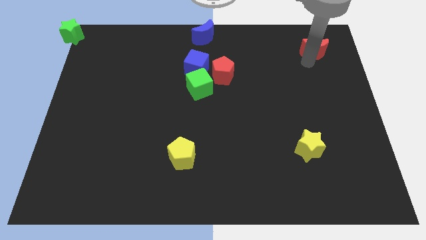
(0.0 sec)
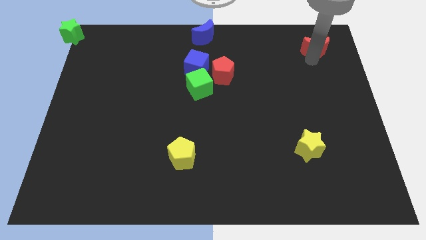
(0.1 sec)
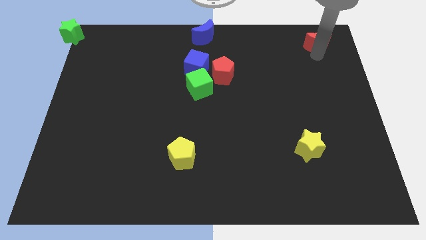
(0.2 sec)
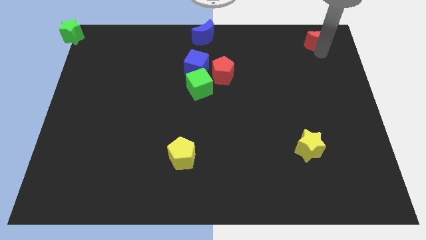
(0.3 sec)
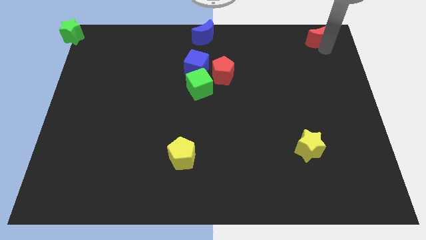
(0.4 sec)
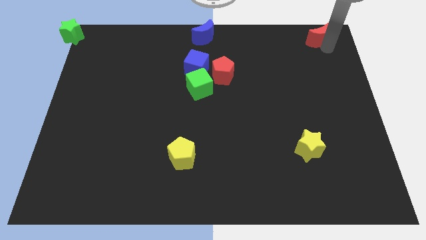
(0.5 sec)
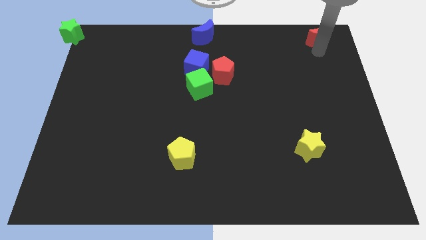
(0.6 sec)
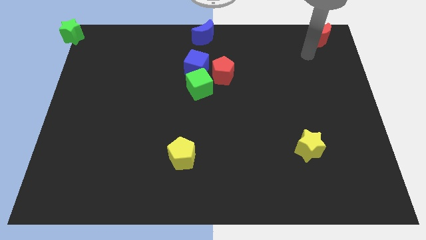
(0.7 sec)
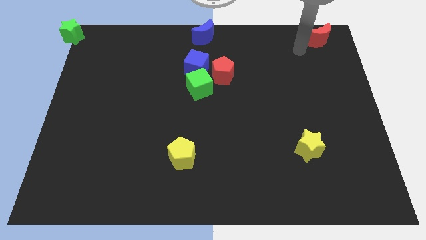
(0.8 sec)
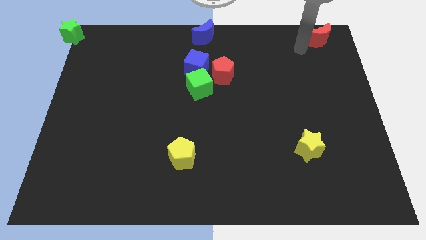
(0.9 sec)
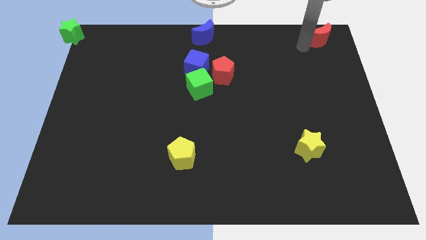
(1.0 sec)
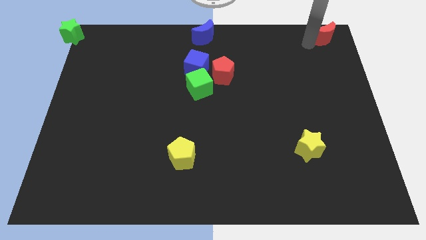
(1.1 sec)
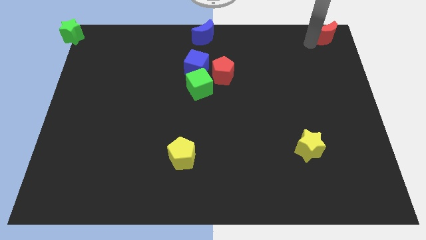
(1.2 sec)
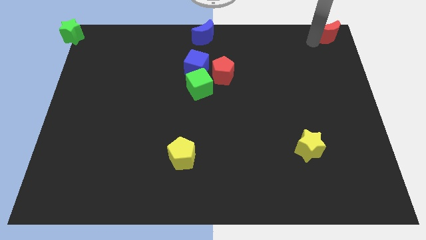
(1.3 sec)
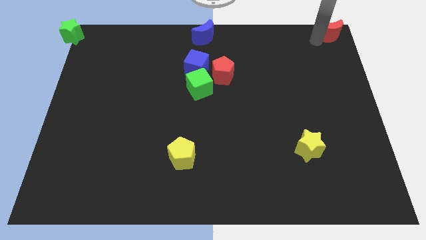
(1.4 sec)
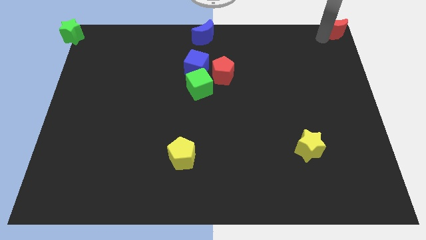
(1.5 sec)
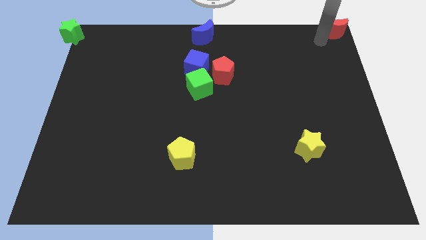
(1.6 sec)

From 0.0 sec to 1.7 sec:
move the red crescent to the top right corner of the board

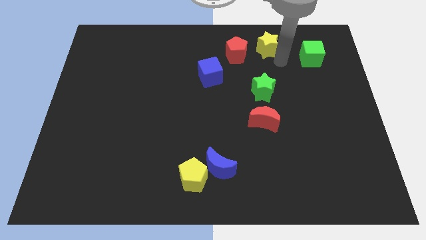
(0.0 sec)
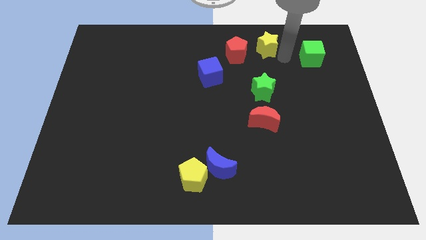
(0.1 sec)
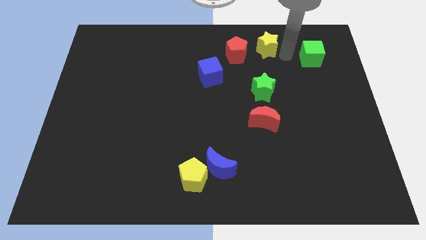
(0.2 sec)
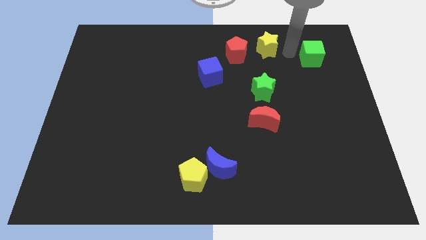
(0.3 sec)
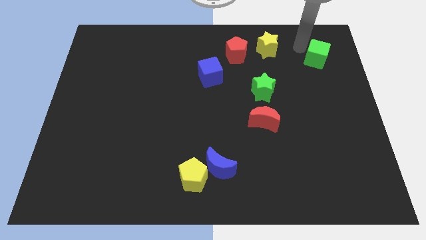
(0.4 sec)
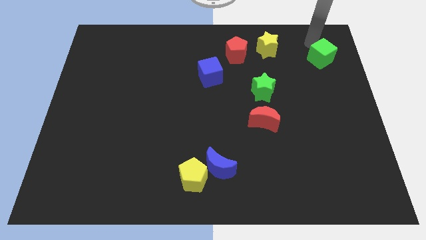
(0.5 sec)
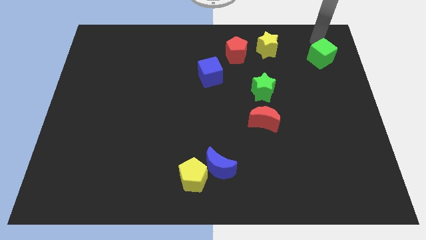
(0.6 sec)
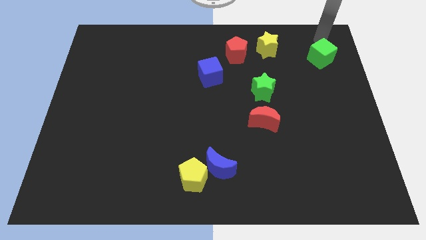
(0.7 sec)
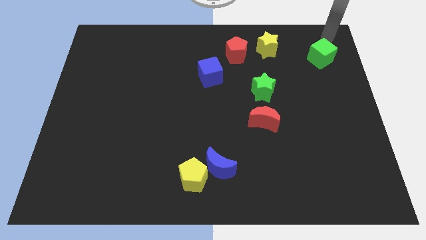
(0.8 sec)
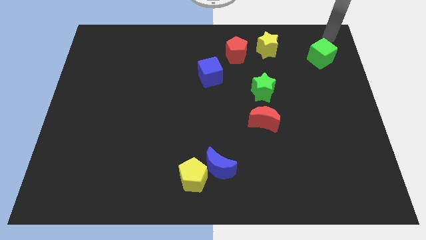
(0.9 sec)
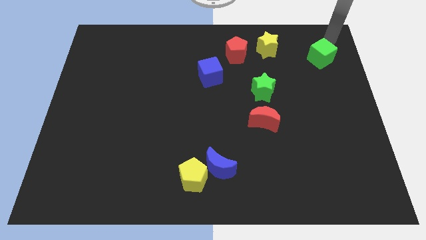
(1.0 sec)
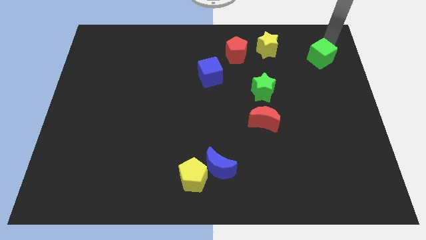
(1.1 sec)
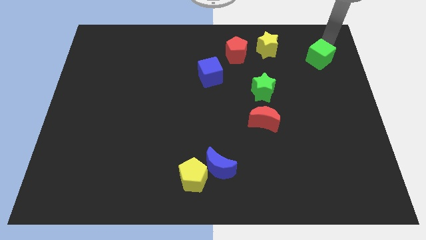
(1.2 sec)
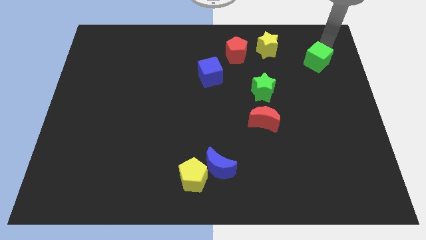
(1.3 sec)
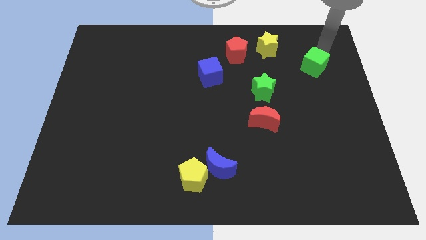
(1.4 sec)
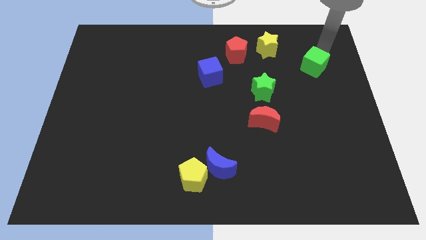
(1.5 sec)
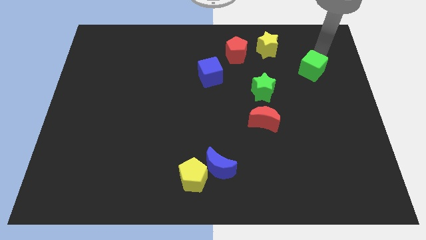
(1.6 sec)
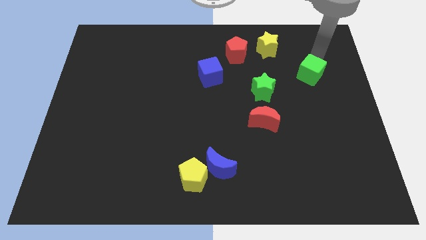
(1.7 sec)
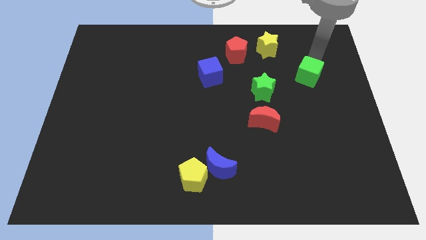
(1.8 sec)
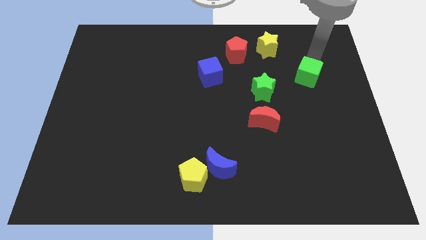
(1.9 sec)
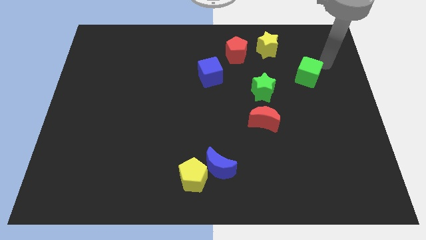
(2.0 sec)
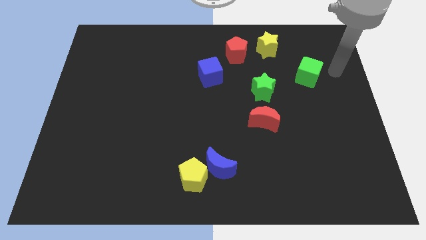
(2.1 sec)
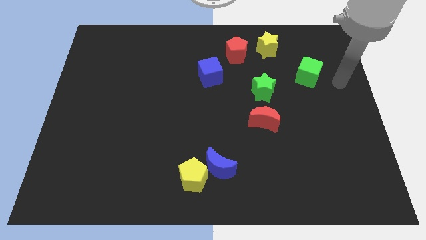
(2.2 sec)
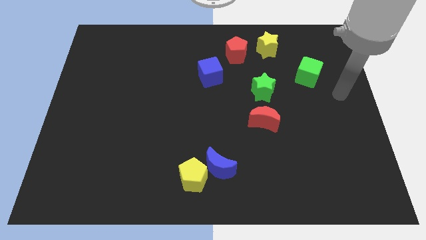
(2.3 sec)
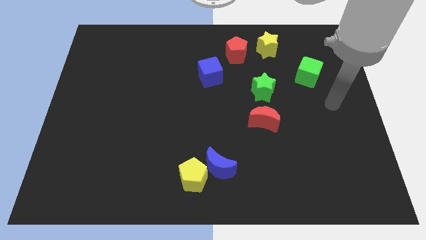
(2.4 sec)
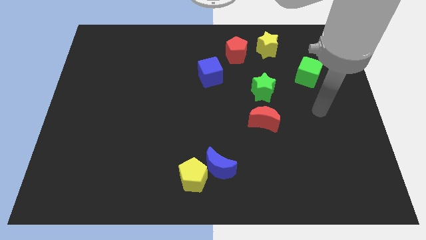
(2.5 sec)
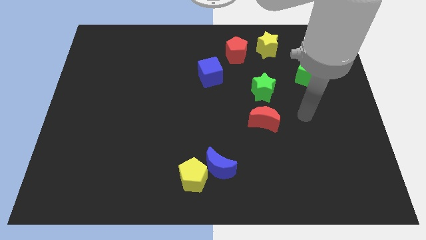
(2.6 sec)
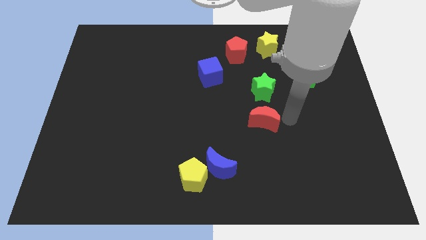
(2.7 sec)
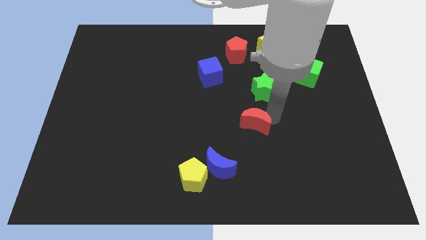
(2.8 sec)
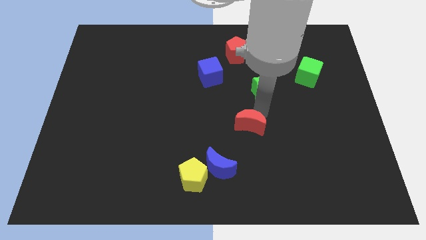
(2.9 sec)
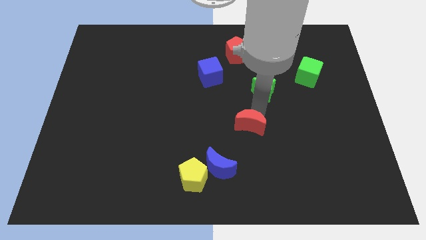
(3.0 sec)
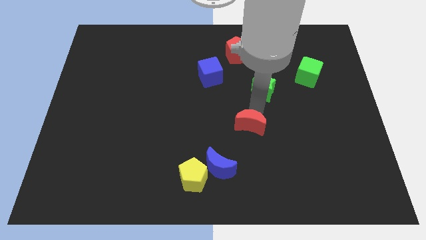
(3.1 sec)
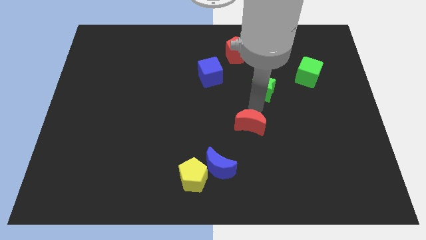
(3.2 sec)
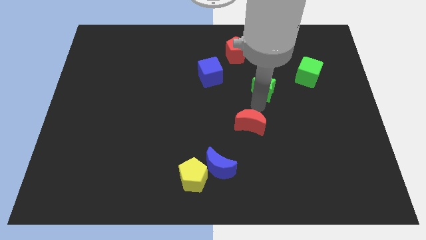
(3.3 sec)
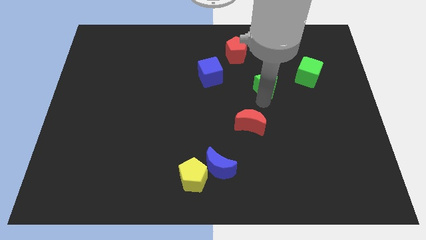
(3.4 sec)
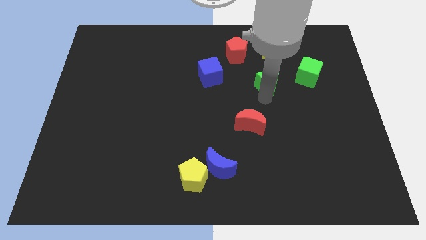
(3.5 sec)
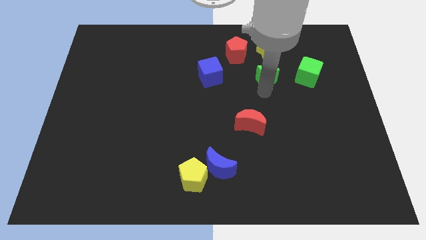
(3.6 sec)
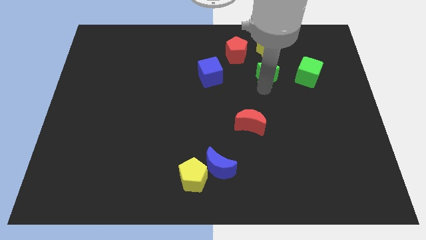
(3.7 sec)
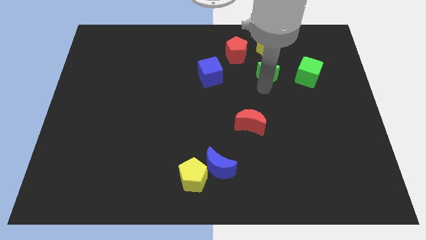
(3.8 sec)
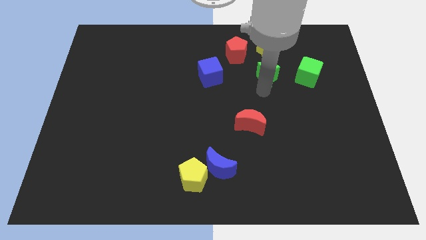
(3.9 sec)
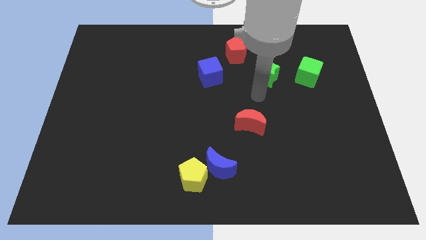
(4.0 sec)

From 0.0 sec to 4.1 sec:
push the green star right to the blue cube

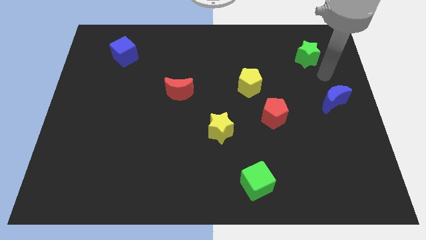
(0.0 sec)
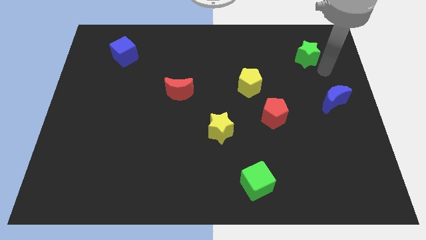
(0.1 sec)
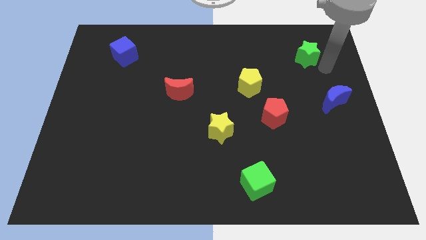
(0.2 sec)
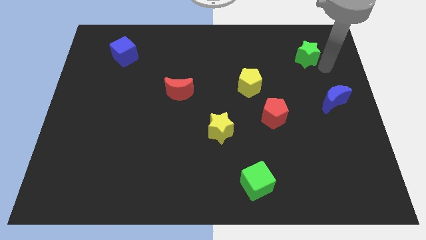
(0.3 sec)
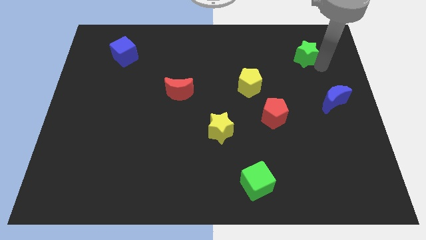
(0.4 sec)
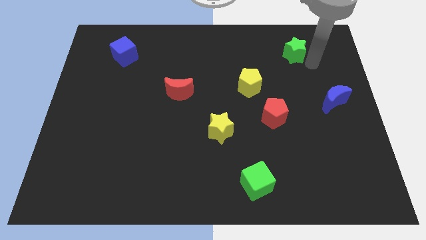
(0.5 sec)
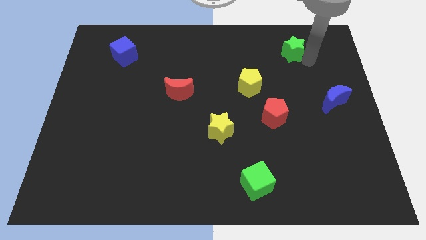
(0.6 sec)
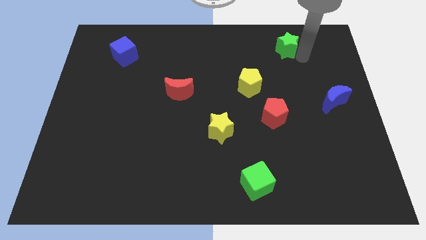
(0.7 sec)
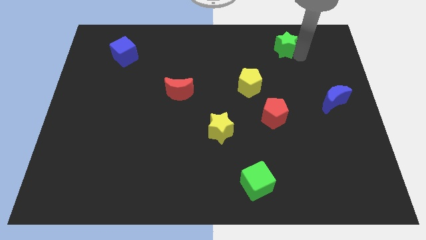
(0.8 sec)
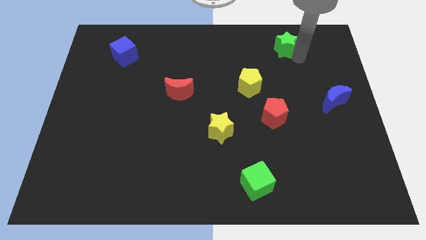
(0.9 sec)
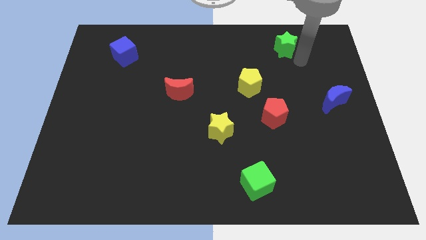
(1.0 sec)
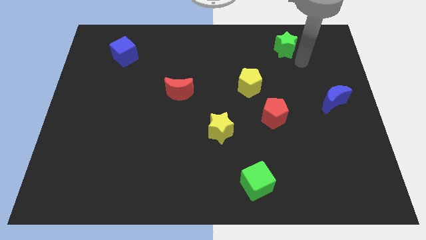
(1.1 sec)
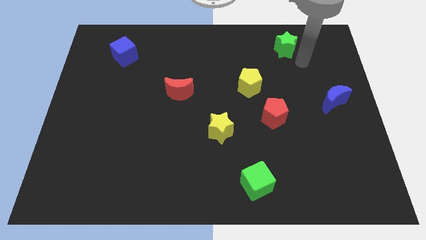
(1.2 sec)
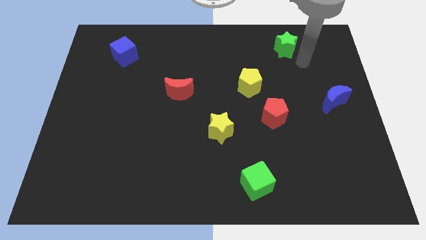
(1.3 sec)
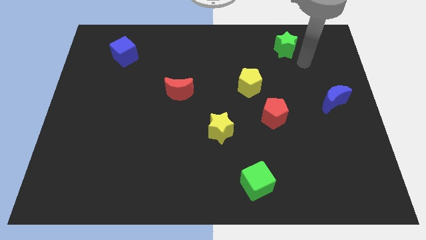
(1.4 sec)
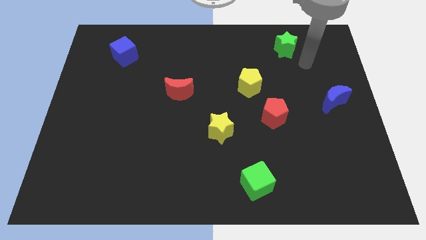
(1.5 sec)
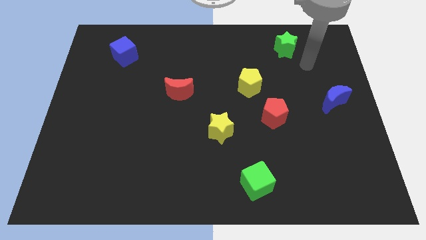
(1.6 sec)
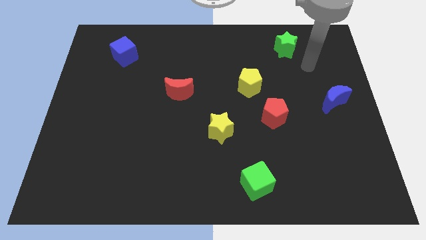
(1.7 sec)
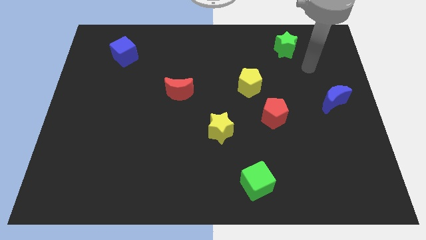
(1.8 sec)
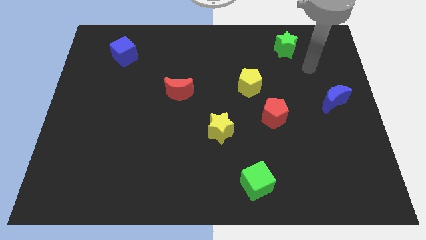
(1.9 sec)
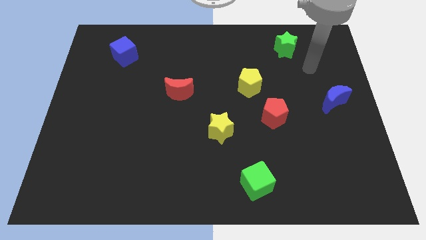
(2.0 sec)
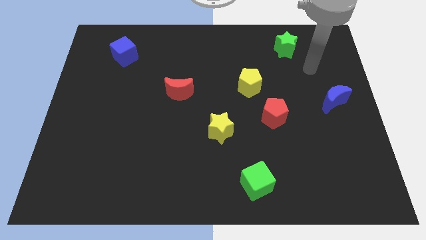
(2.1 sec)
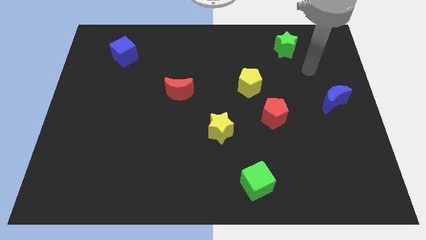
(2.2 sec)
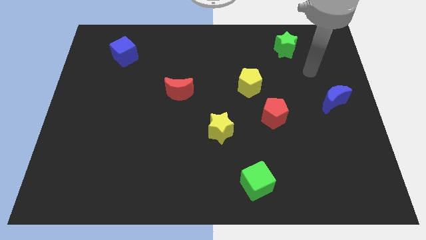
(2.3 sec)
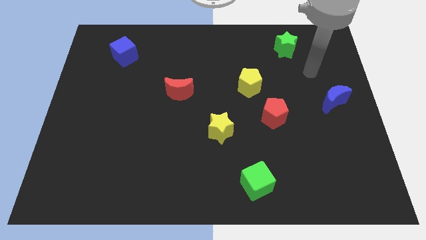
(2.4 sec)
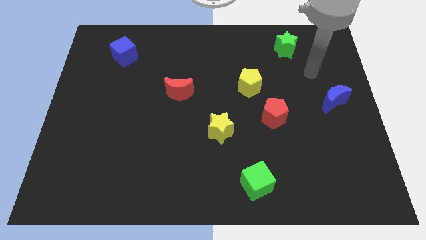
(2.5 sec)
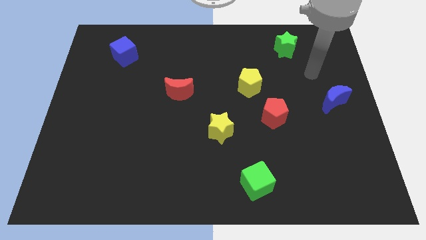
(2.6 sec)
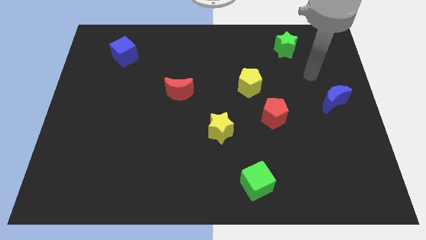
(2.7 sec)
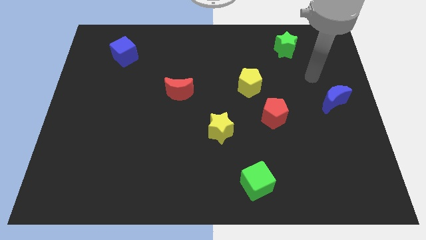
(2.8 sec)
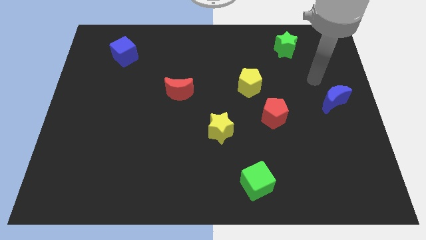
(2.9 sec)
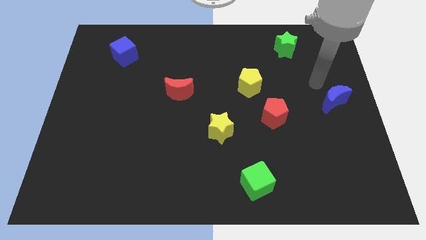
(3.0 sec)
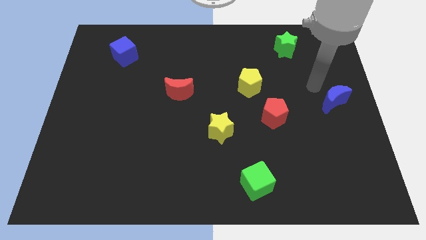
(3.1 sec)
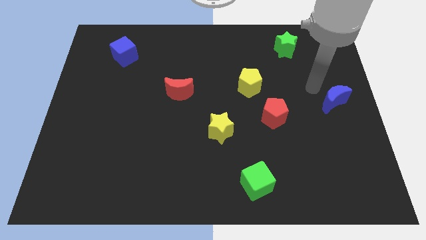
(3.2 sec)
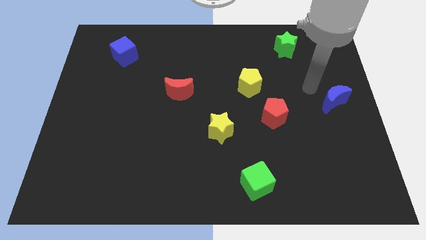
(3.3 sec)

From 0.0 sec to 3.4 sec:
push the green star to the top side
